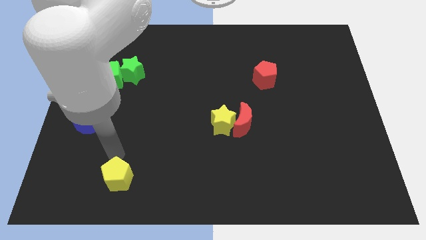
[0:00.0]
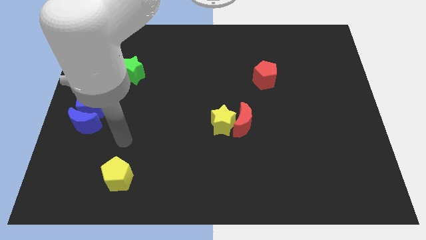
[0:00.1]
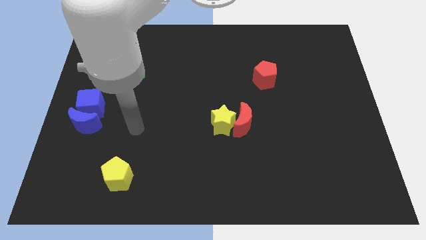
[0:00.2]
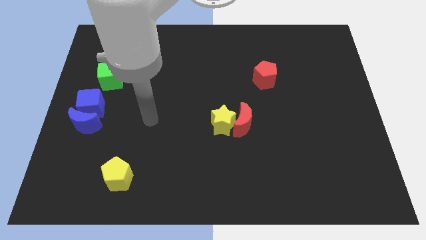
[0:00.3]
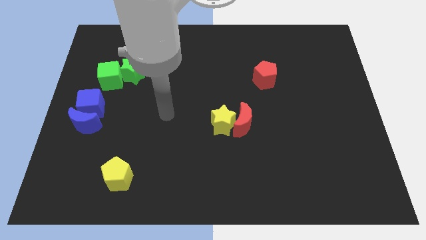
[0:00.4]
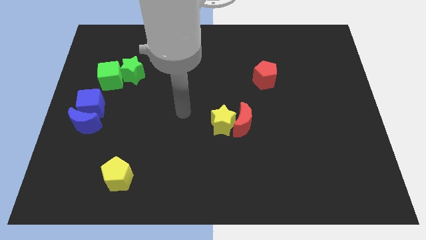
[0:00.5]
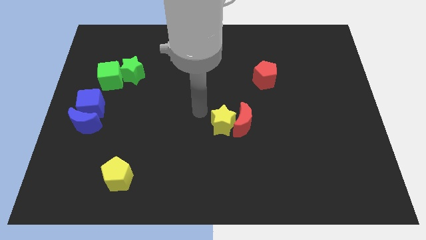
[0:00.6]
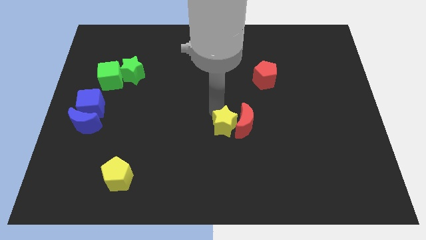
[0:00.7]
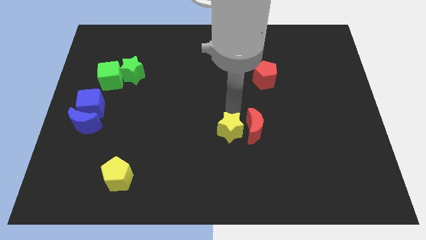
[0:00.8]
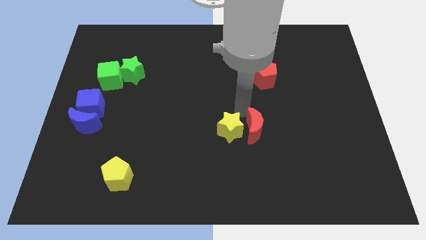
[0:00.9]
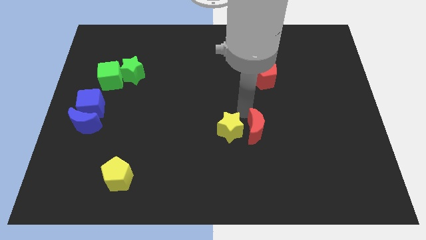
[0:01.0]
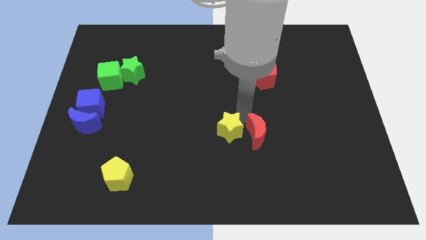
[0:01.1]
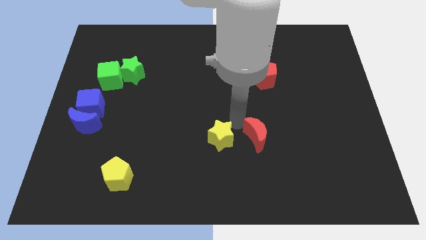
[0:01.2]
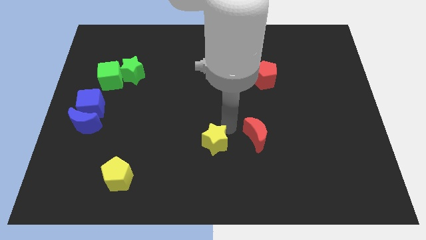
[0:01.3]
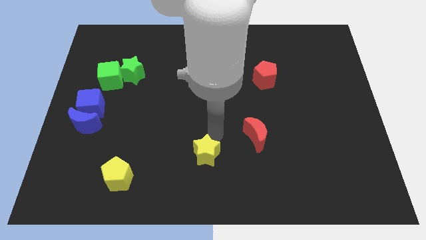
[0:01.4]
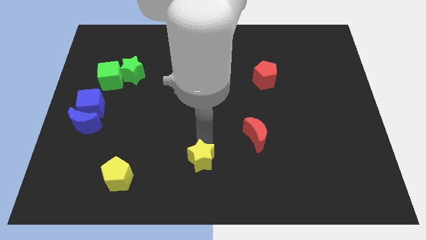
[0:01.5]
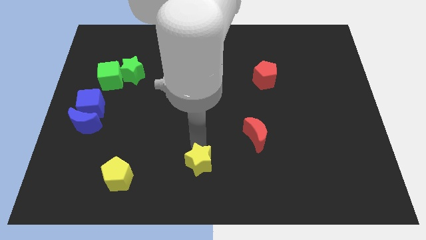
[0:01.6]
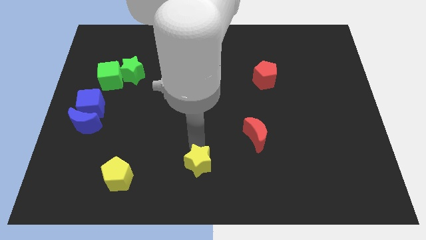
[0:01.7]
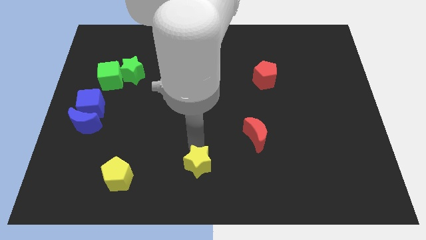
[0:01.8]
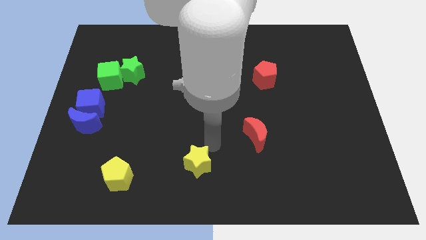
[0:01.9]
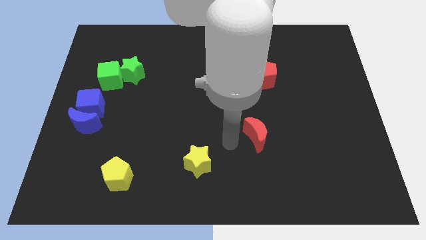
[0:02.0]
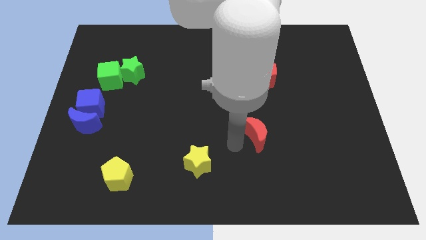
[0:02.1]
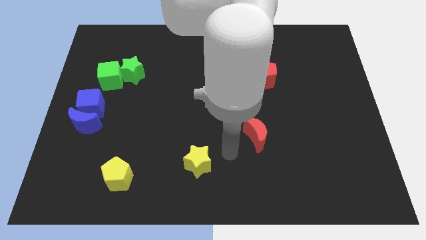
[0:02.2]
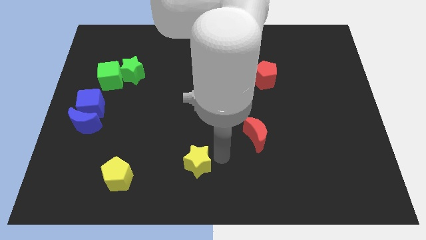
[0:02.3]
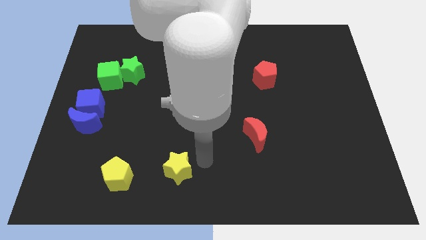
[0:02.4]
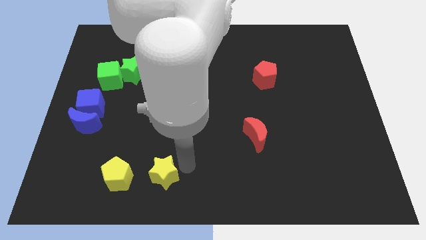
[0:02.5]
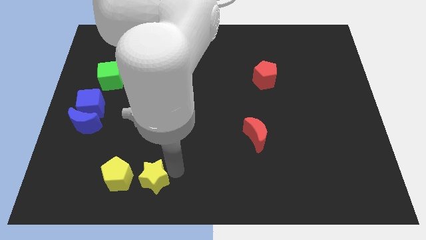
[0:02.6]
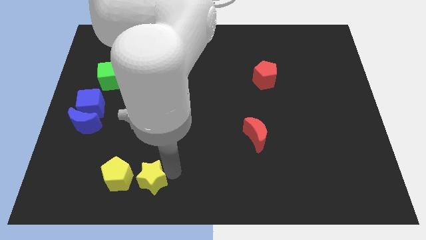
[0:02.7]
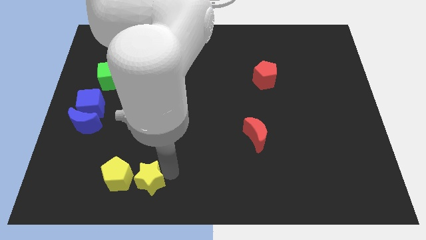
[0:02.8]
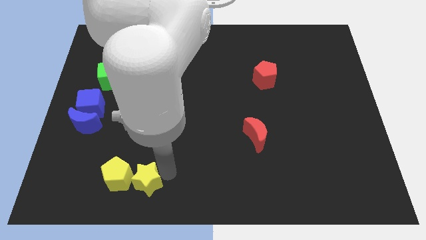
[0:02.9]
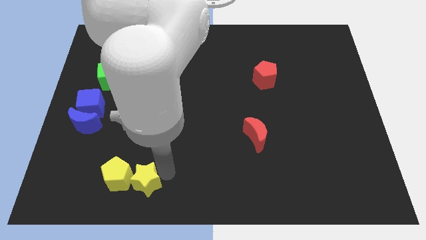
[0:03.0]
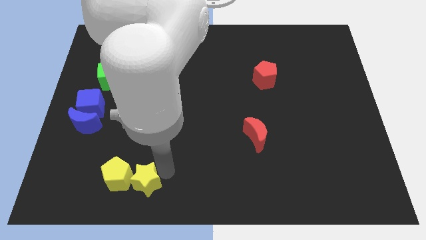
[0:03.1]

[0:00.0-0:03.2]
move the yellow star to the right of the yellow pentagon

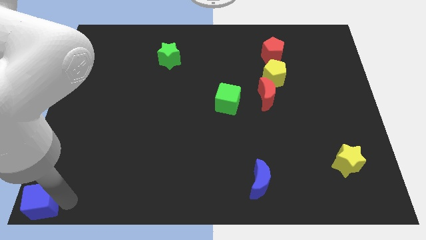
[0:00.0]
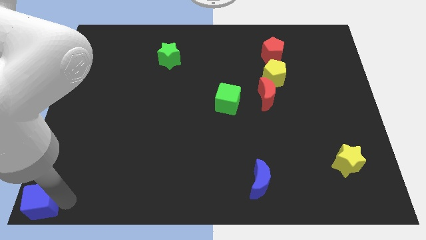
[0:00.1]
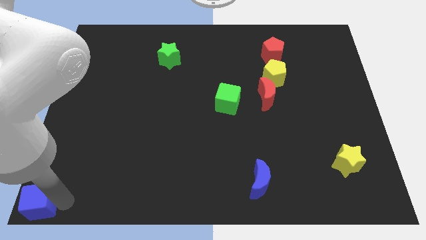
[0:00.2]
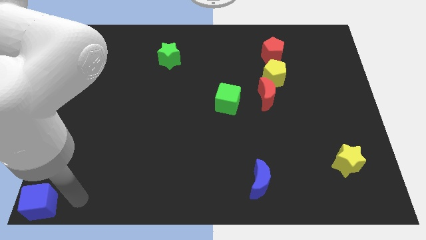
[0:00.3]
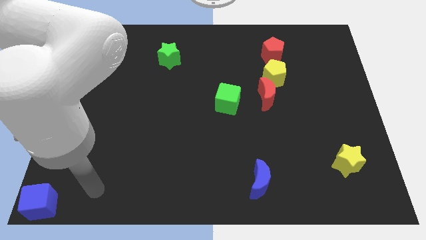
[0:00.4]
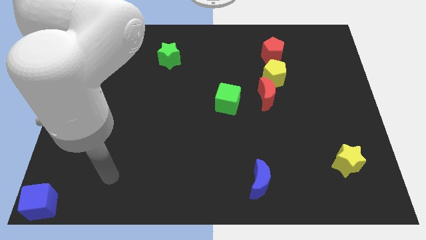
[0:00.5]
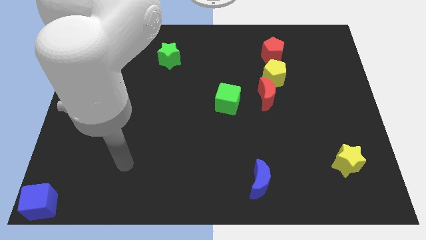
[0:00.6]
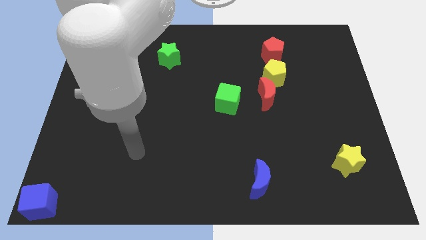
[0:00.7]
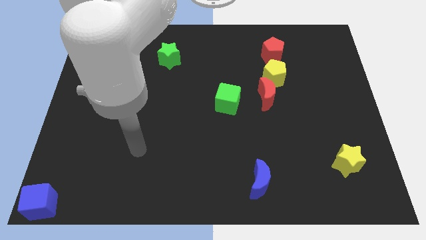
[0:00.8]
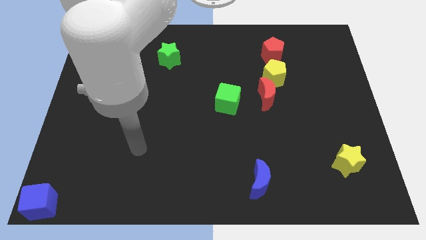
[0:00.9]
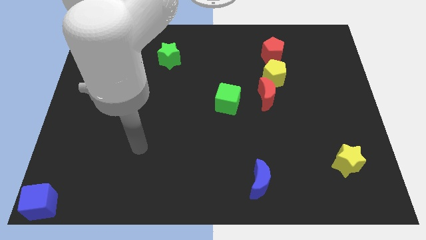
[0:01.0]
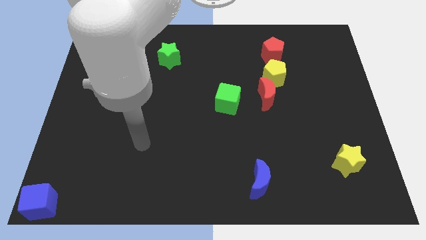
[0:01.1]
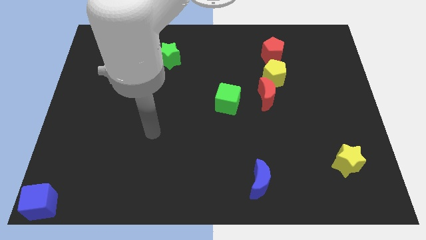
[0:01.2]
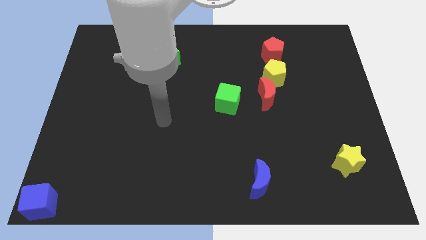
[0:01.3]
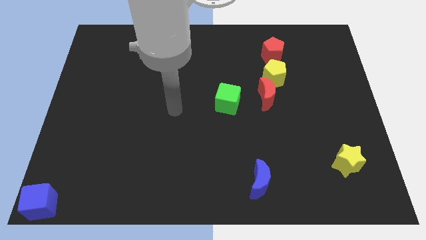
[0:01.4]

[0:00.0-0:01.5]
go away from the blue cube

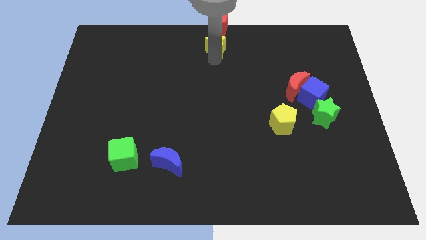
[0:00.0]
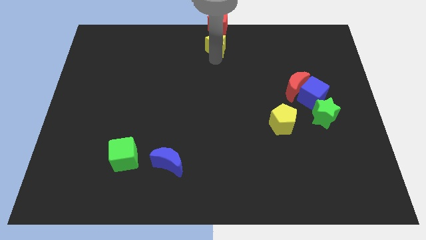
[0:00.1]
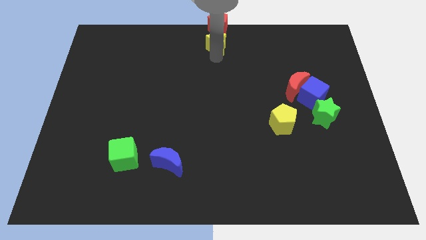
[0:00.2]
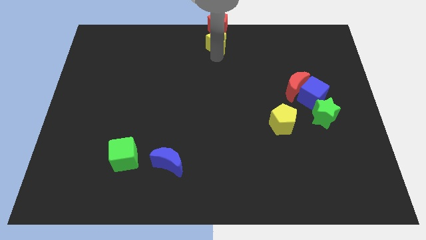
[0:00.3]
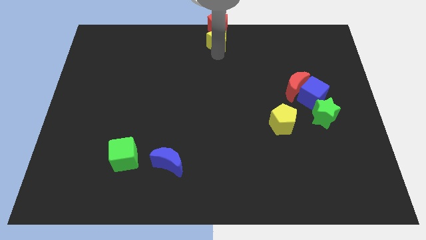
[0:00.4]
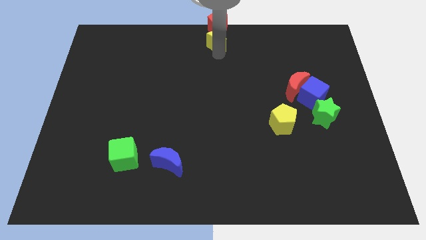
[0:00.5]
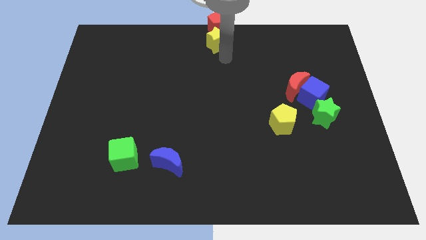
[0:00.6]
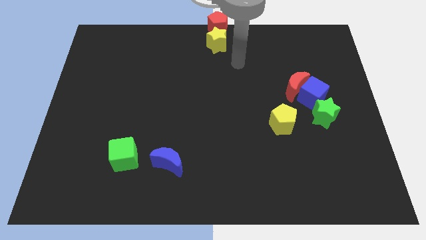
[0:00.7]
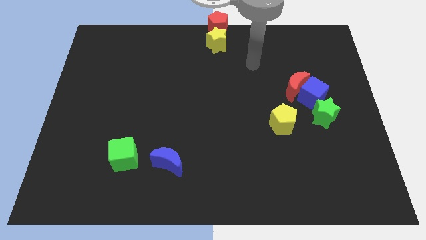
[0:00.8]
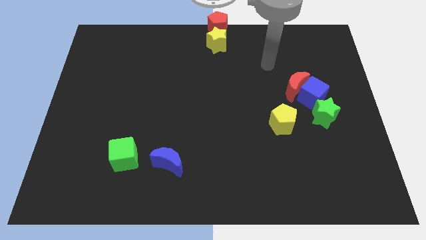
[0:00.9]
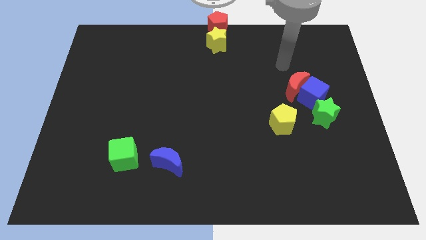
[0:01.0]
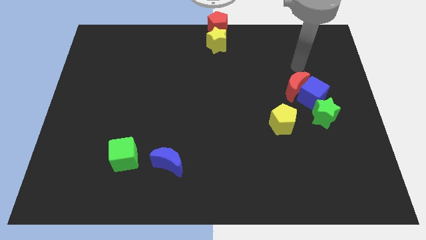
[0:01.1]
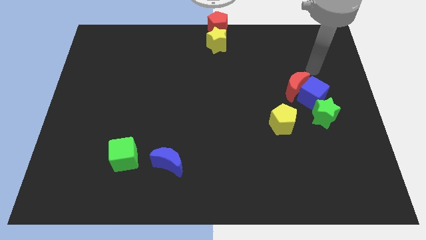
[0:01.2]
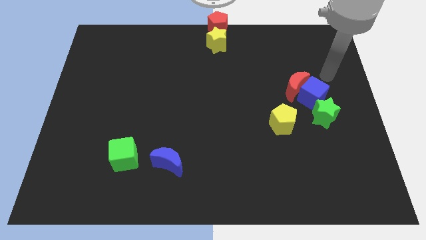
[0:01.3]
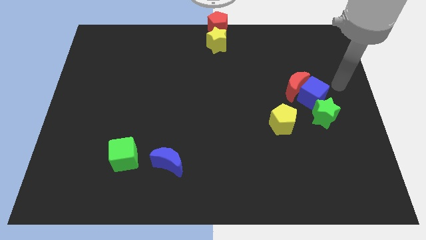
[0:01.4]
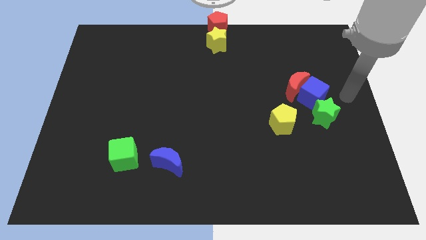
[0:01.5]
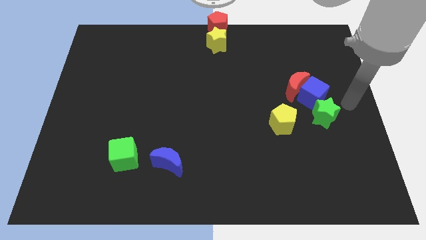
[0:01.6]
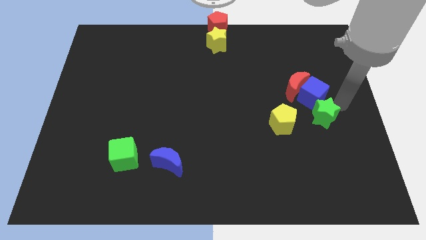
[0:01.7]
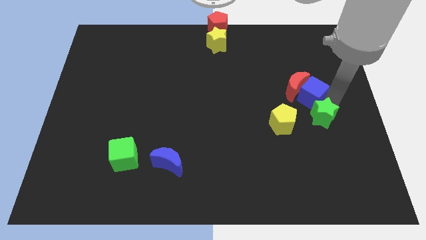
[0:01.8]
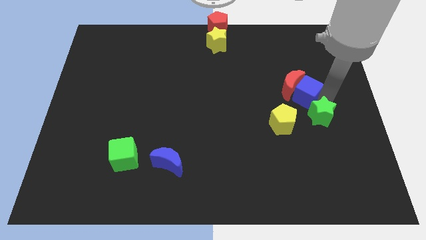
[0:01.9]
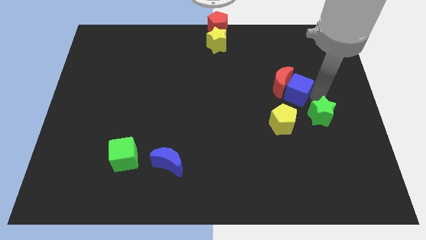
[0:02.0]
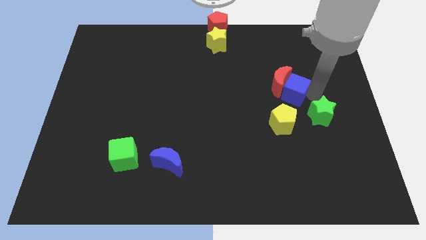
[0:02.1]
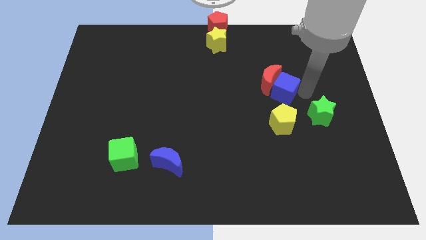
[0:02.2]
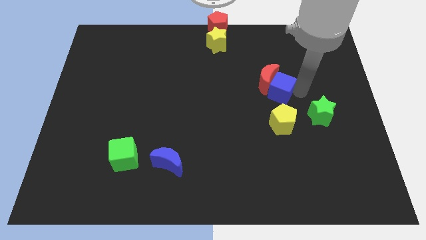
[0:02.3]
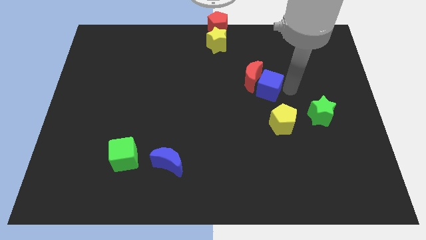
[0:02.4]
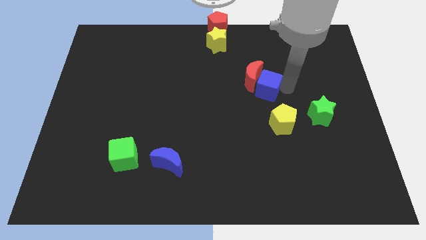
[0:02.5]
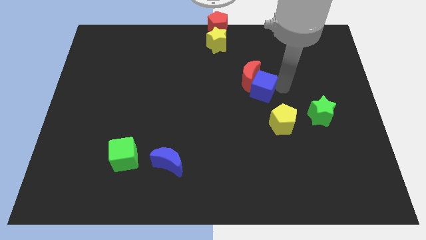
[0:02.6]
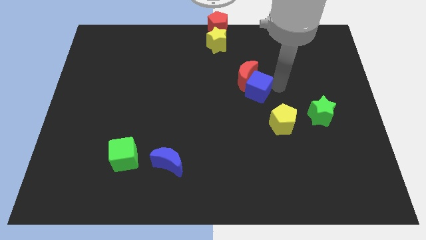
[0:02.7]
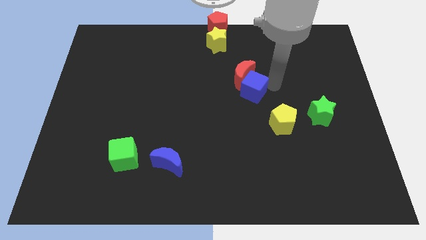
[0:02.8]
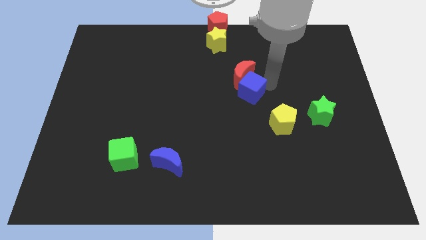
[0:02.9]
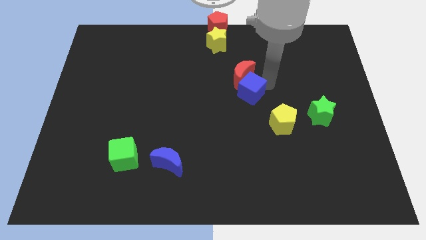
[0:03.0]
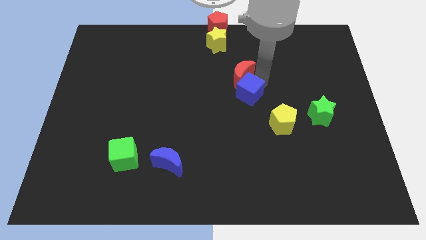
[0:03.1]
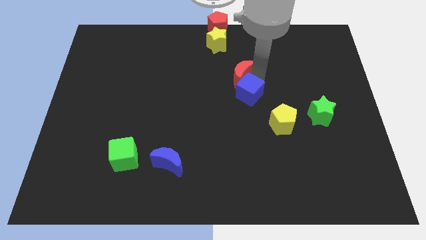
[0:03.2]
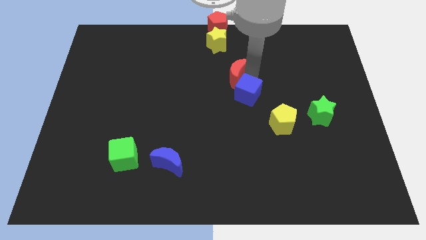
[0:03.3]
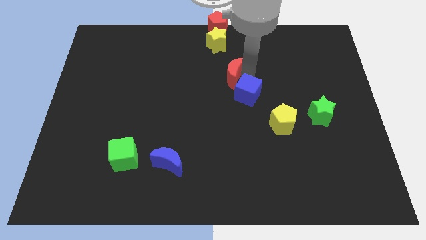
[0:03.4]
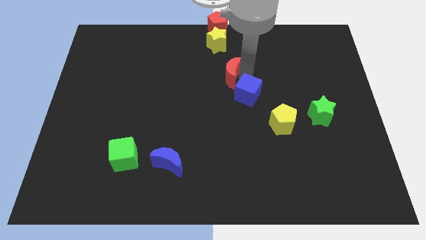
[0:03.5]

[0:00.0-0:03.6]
push both red crescent and the blue cube together towards the center

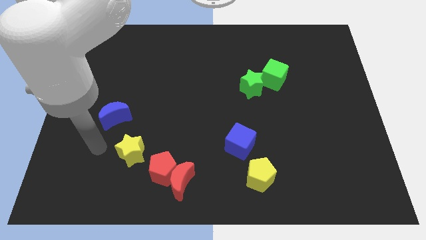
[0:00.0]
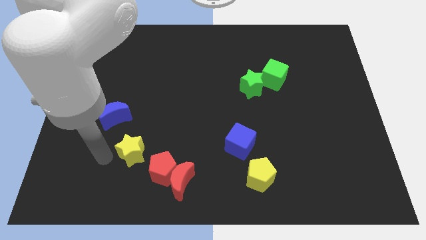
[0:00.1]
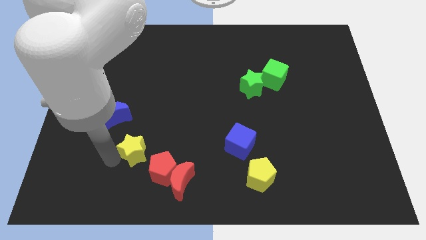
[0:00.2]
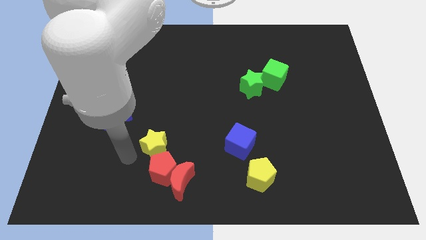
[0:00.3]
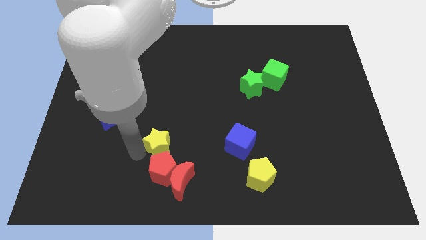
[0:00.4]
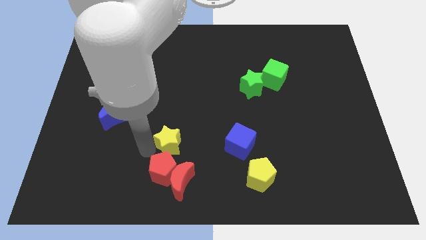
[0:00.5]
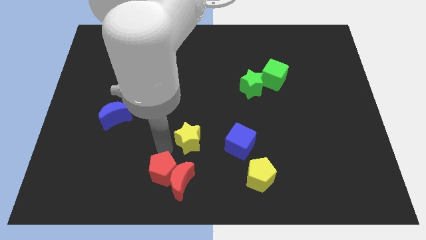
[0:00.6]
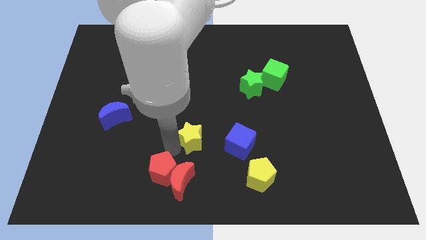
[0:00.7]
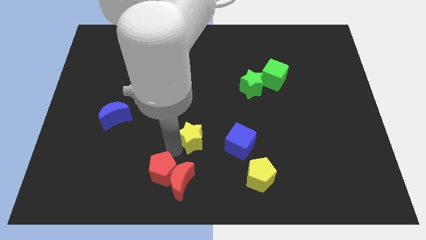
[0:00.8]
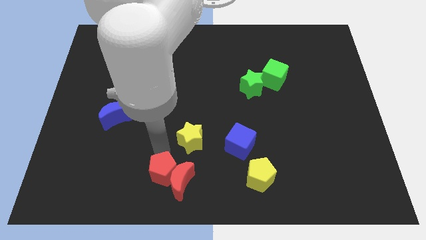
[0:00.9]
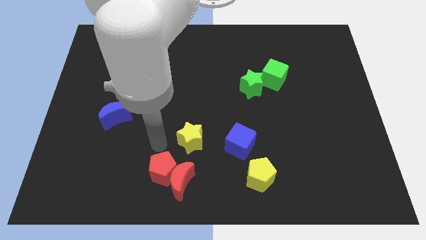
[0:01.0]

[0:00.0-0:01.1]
place the yellow star above the red moon
